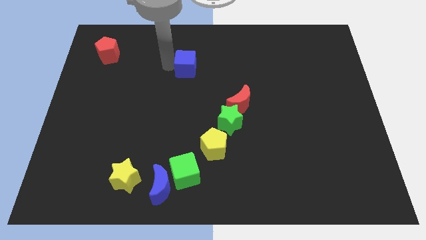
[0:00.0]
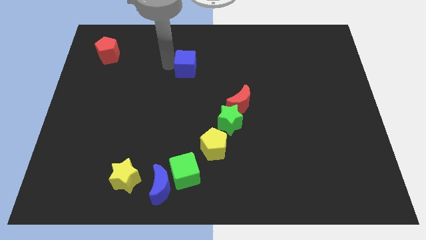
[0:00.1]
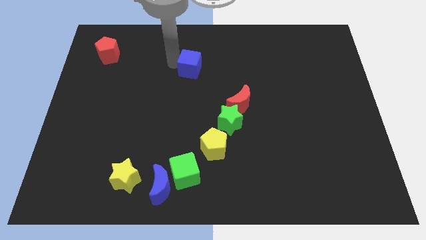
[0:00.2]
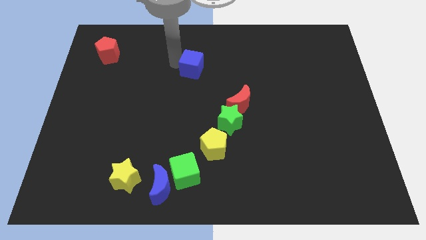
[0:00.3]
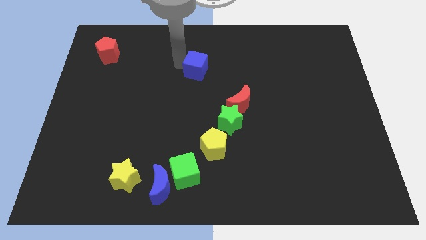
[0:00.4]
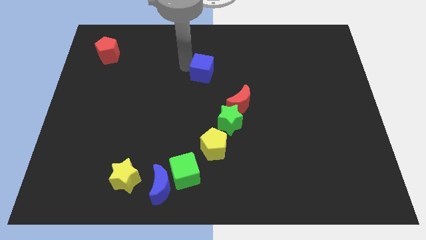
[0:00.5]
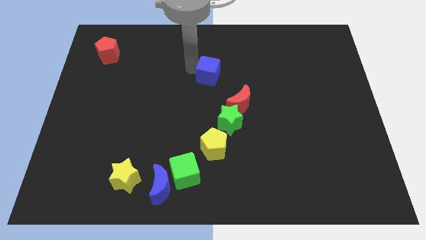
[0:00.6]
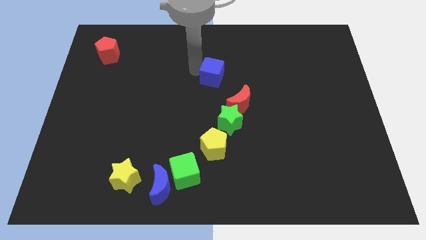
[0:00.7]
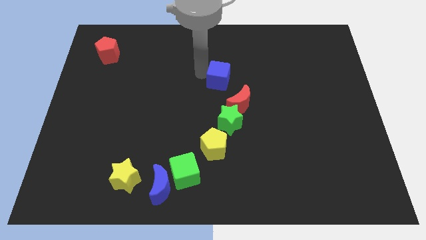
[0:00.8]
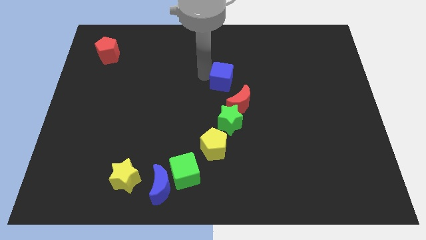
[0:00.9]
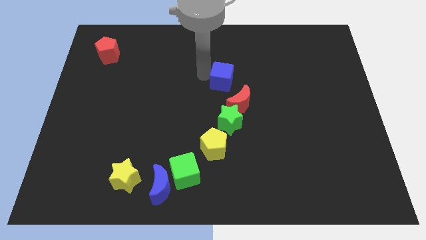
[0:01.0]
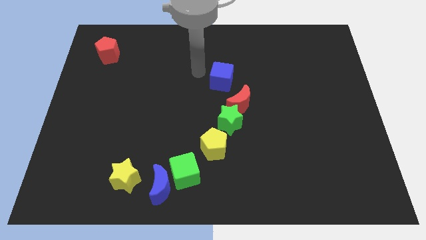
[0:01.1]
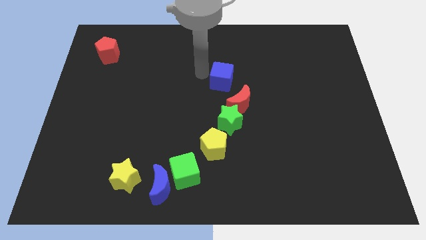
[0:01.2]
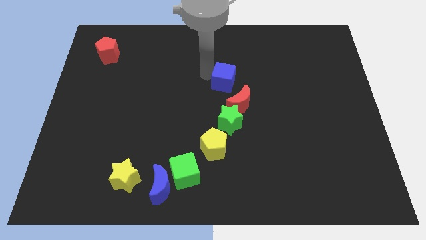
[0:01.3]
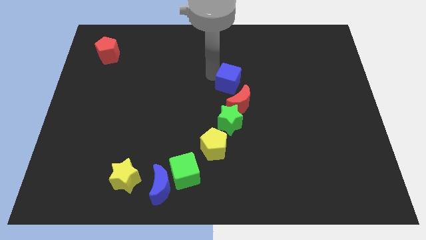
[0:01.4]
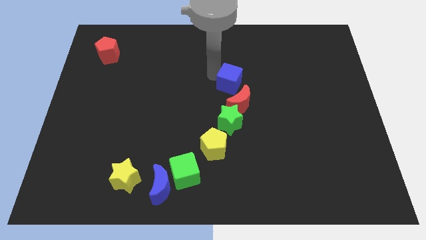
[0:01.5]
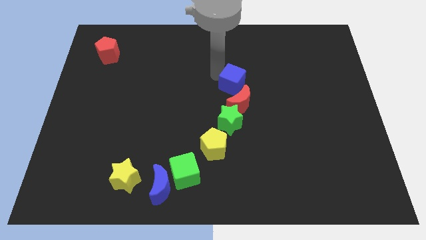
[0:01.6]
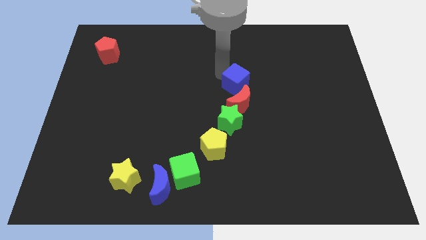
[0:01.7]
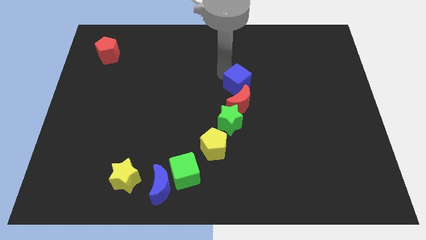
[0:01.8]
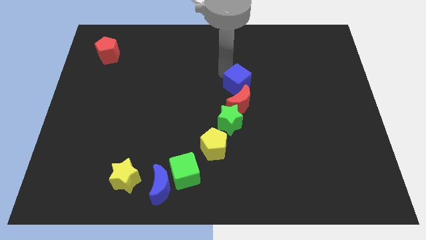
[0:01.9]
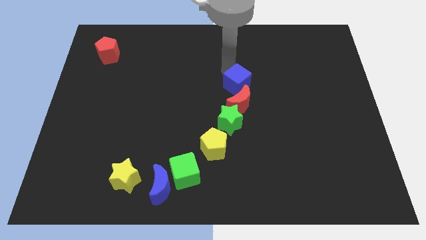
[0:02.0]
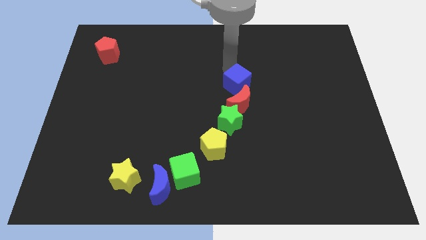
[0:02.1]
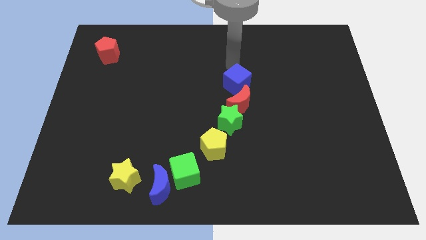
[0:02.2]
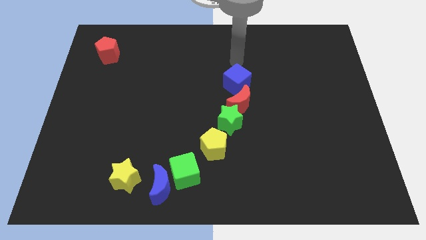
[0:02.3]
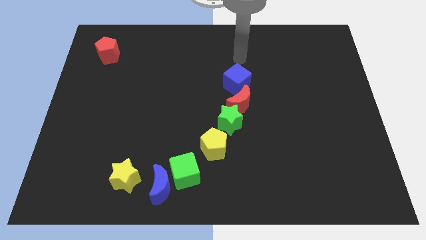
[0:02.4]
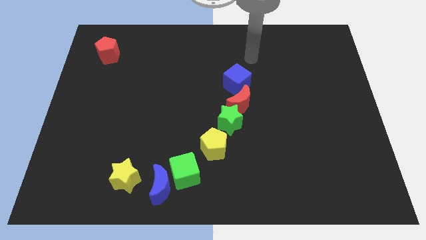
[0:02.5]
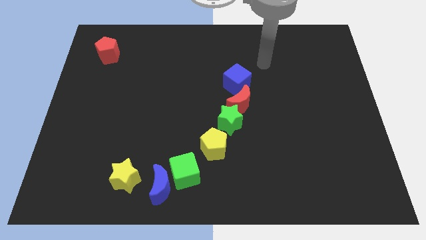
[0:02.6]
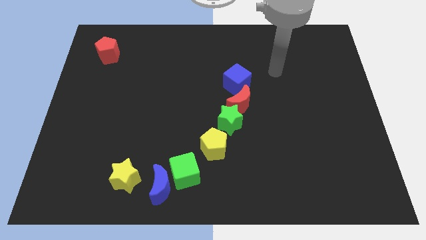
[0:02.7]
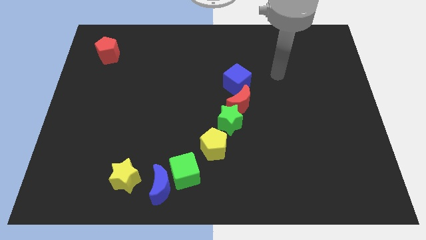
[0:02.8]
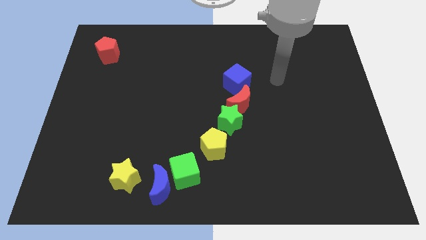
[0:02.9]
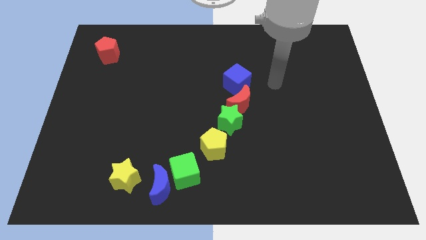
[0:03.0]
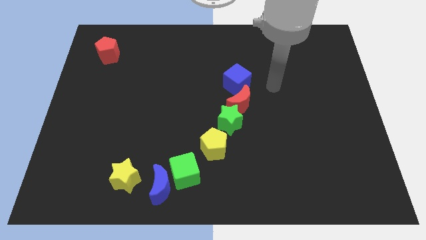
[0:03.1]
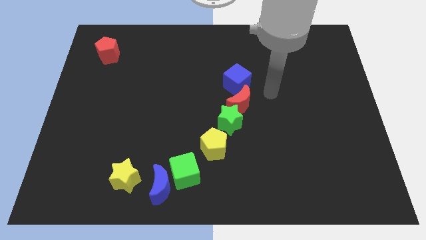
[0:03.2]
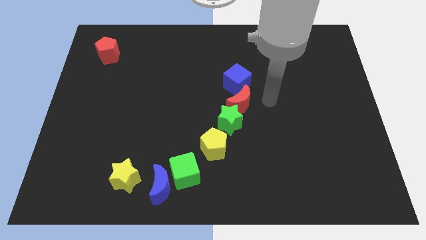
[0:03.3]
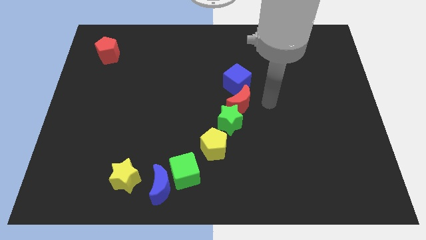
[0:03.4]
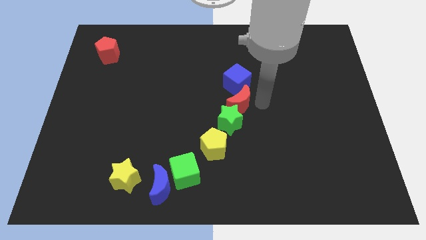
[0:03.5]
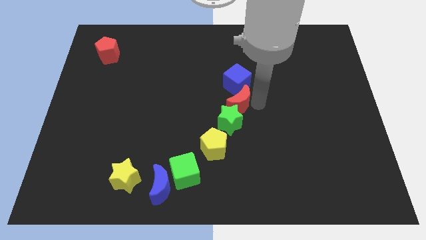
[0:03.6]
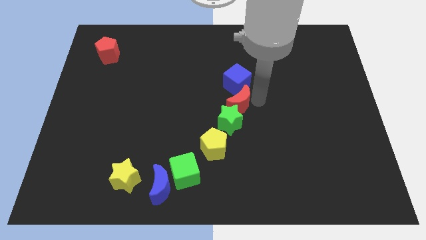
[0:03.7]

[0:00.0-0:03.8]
place the blue cube above the red crescent

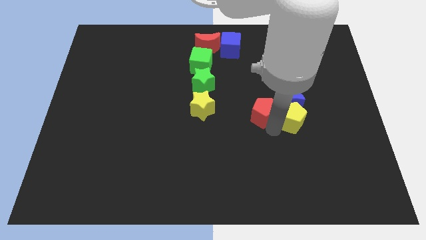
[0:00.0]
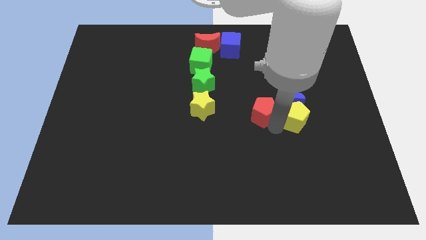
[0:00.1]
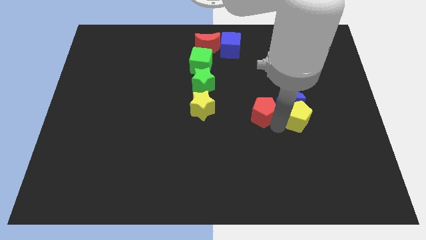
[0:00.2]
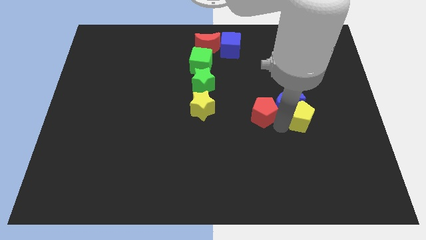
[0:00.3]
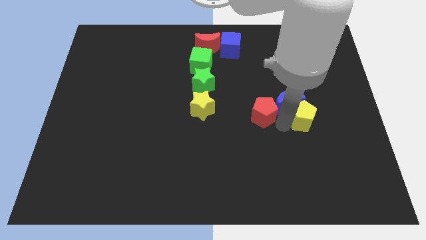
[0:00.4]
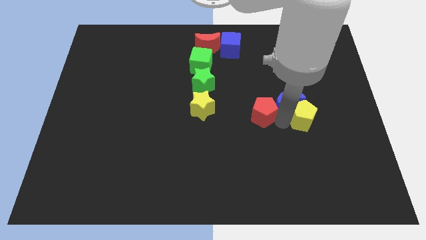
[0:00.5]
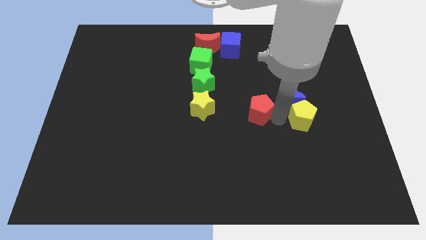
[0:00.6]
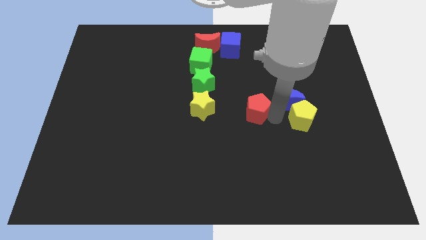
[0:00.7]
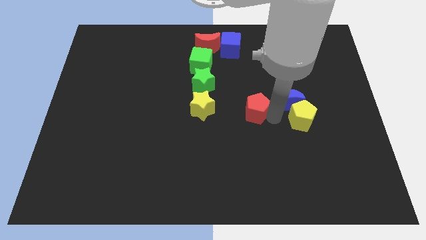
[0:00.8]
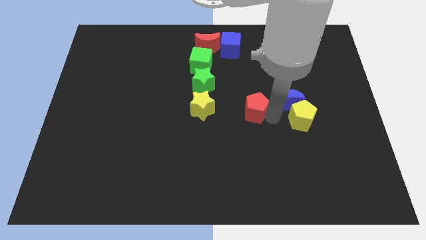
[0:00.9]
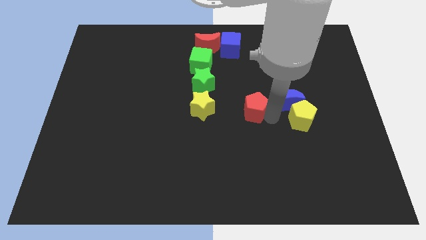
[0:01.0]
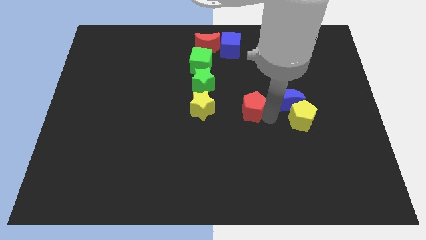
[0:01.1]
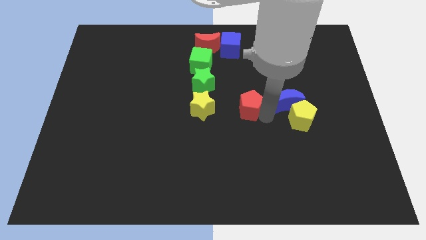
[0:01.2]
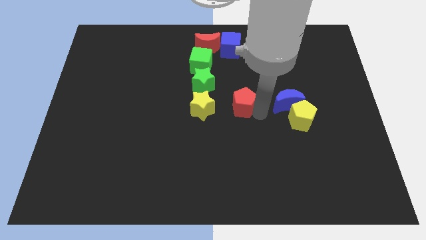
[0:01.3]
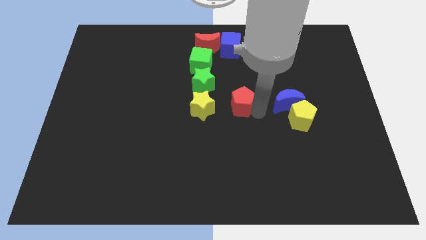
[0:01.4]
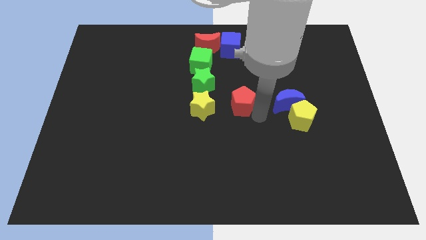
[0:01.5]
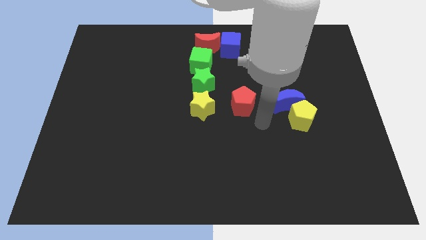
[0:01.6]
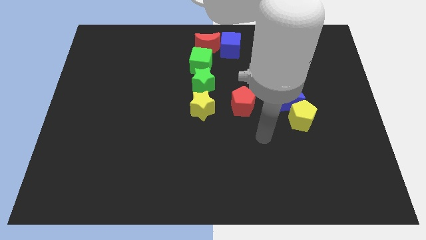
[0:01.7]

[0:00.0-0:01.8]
move the red pentagon in between the yellow star and blue crescent

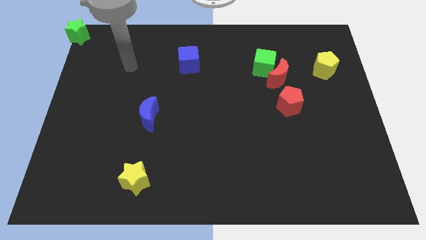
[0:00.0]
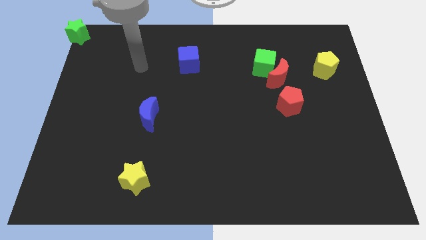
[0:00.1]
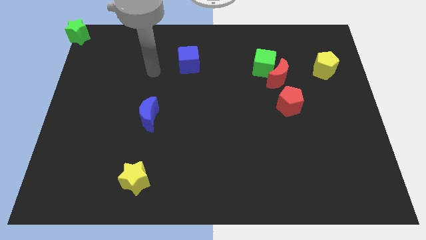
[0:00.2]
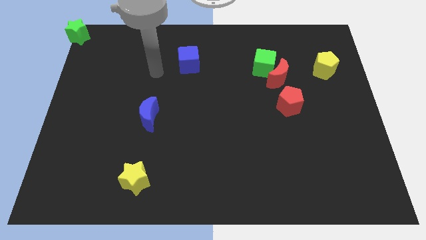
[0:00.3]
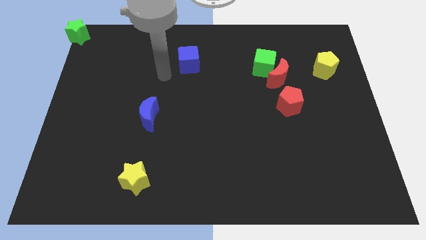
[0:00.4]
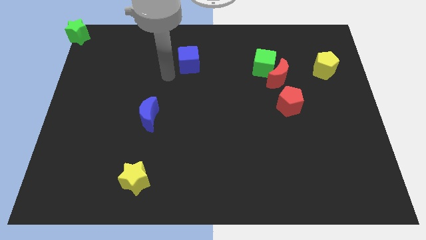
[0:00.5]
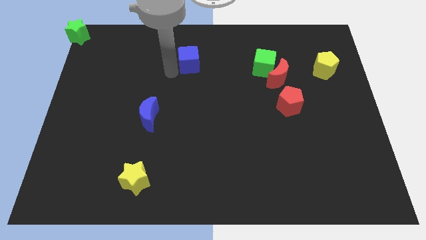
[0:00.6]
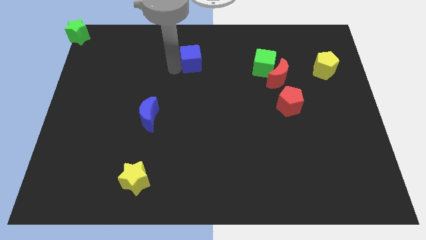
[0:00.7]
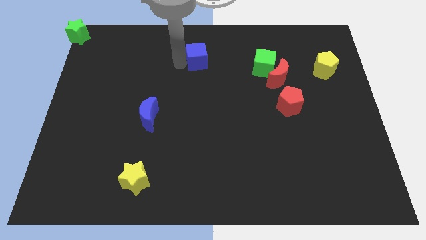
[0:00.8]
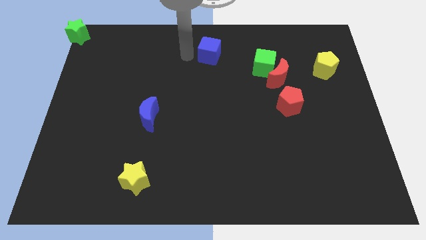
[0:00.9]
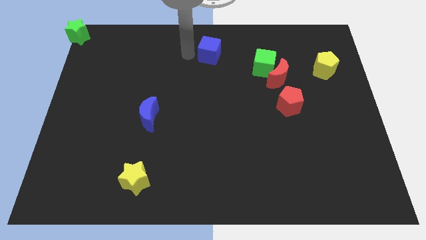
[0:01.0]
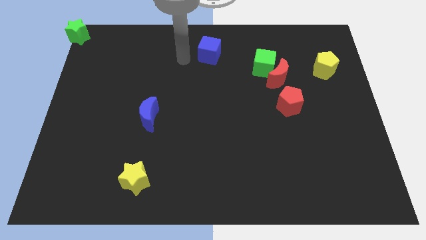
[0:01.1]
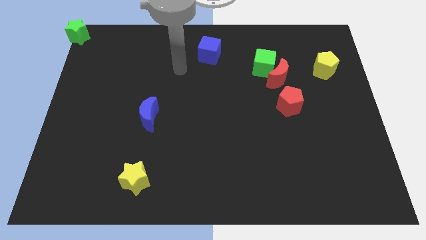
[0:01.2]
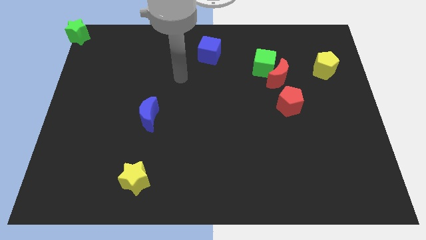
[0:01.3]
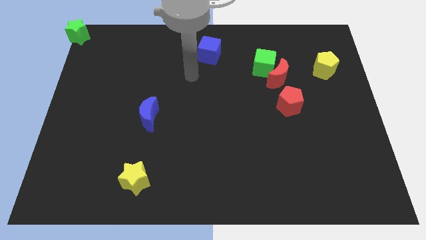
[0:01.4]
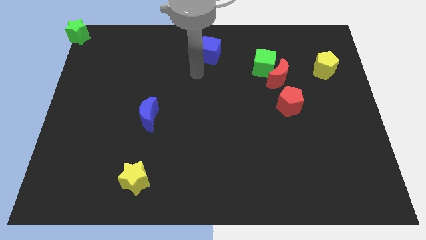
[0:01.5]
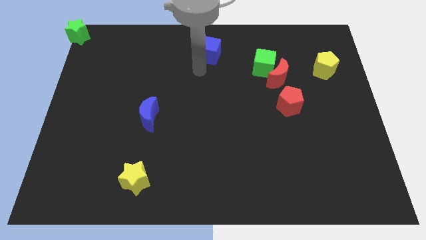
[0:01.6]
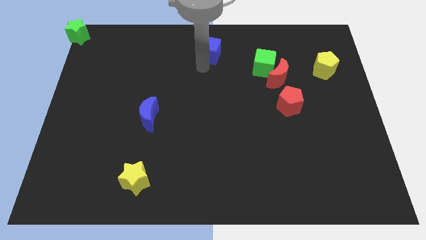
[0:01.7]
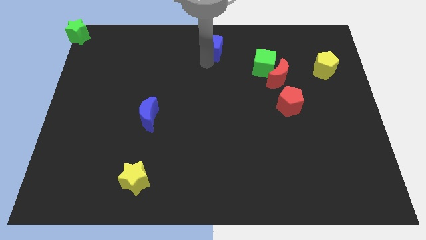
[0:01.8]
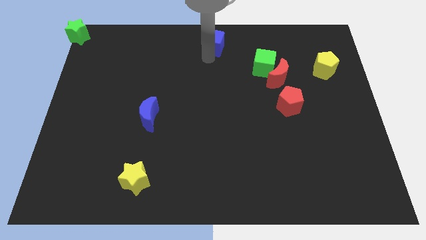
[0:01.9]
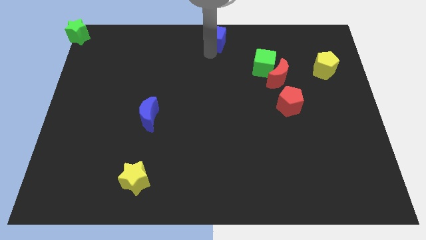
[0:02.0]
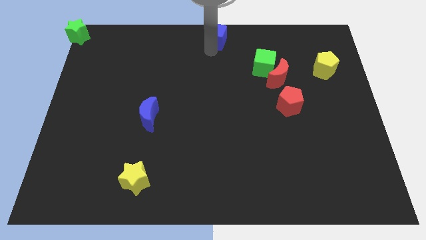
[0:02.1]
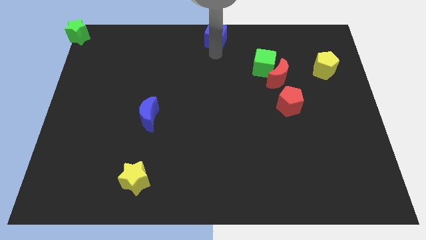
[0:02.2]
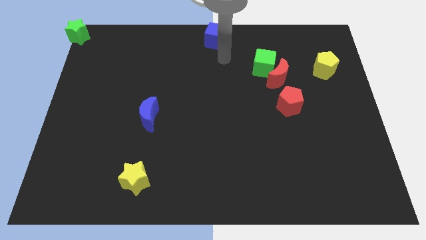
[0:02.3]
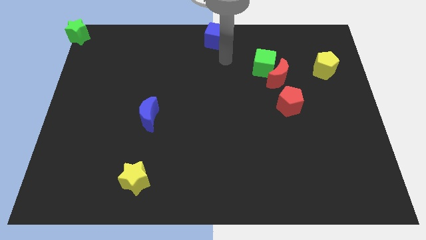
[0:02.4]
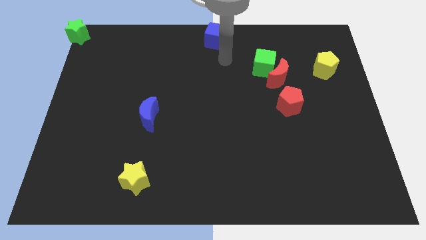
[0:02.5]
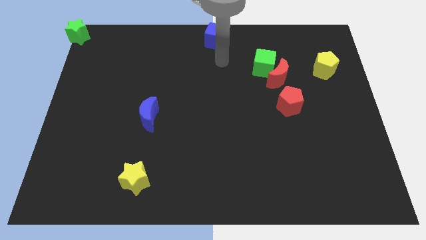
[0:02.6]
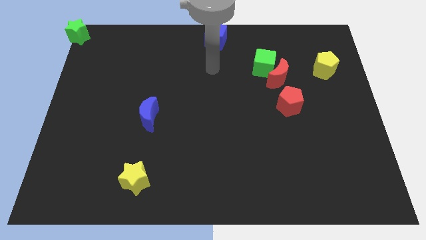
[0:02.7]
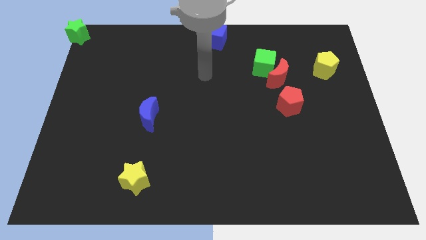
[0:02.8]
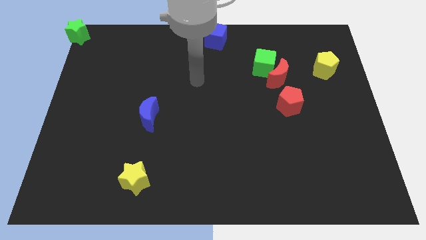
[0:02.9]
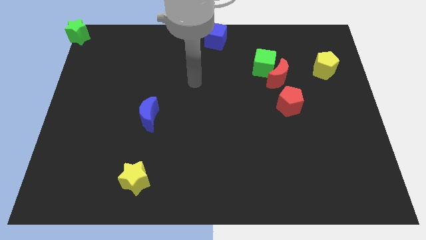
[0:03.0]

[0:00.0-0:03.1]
move the blue cube to the top center of the board

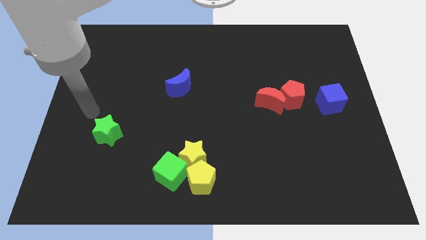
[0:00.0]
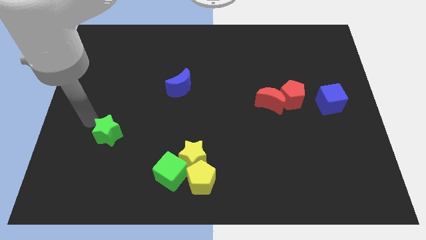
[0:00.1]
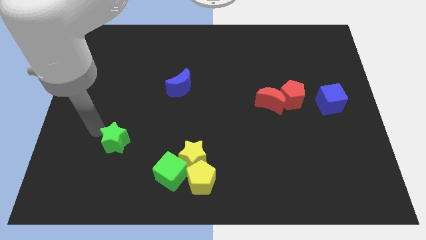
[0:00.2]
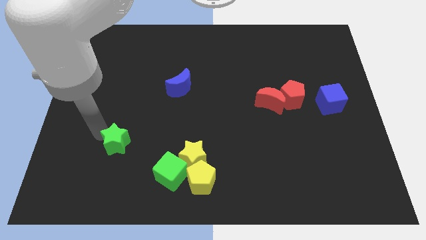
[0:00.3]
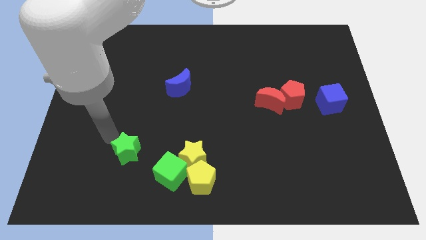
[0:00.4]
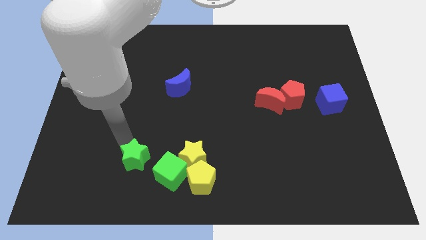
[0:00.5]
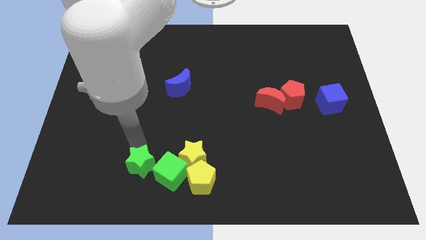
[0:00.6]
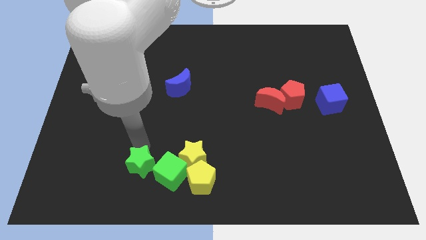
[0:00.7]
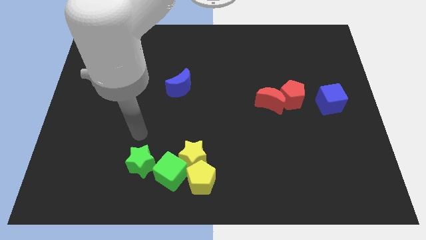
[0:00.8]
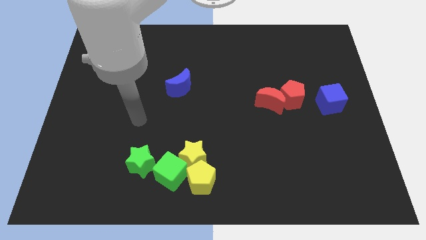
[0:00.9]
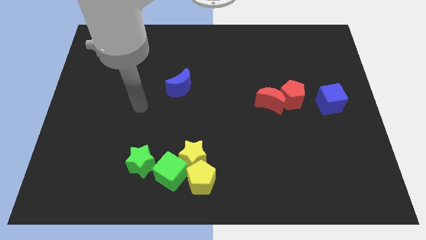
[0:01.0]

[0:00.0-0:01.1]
push the green star towards the left of the green cube
